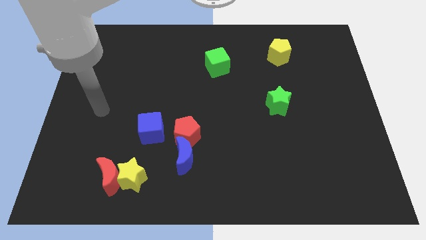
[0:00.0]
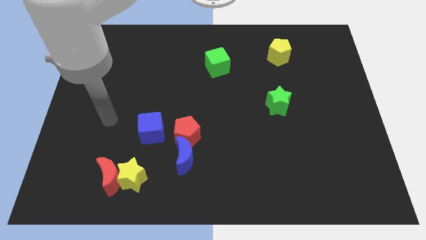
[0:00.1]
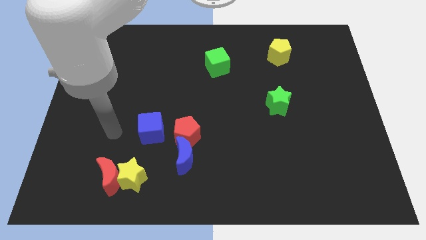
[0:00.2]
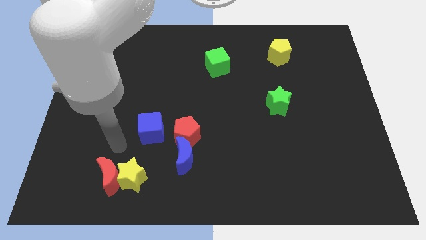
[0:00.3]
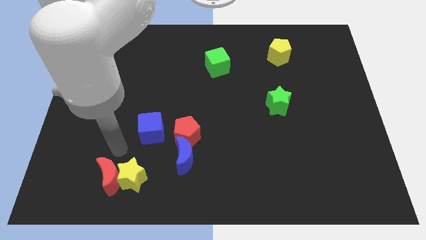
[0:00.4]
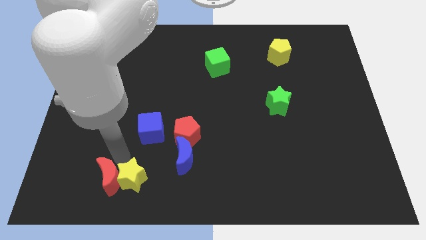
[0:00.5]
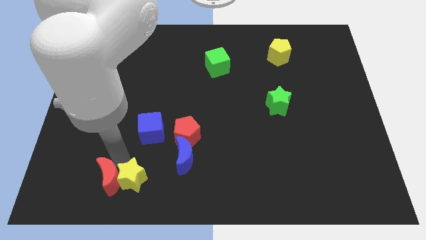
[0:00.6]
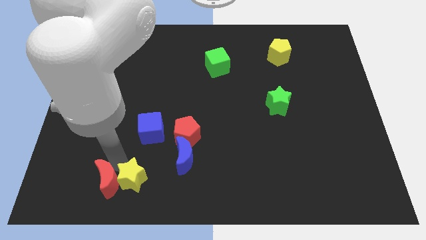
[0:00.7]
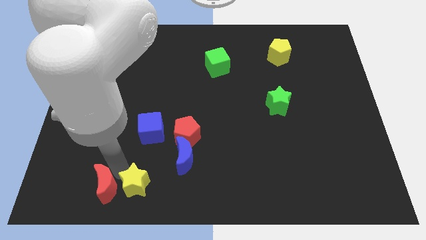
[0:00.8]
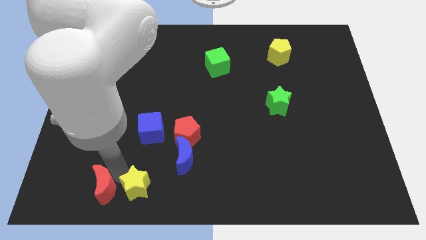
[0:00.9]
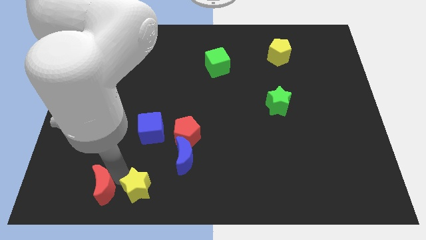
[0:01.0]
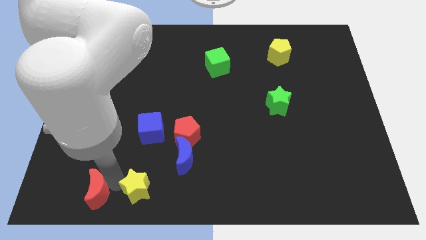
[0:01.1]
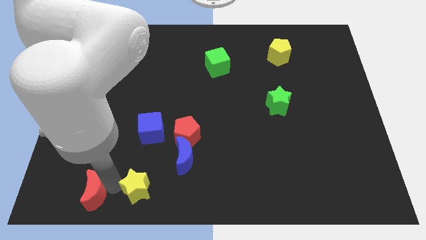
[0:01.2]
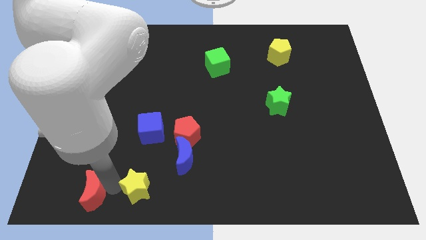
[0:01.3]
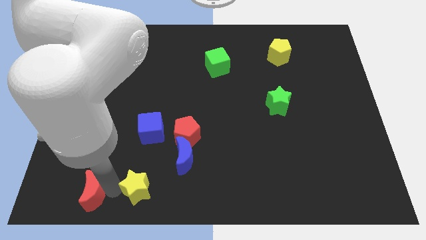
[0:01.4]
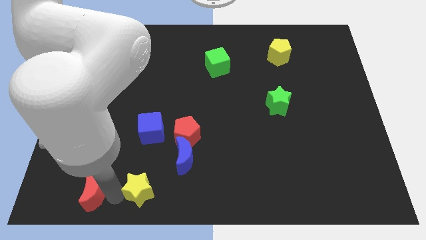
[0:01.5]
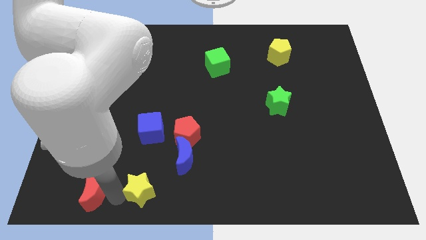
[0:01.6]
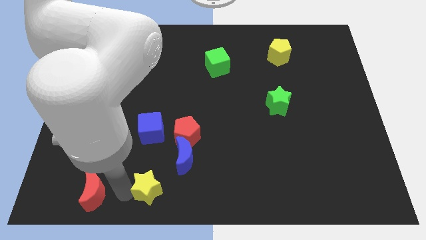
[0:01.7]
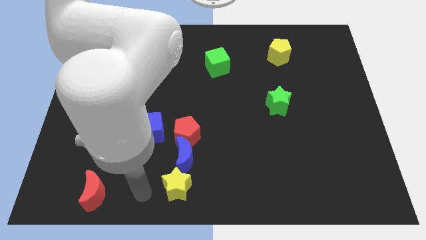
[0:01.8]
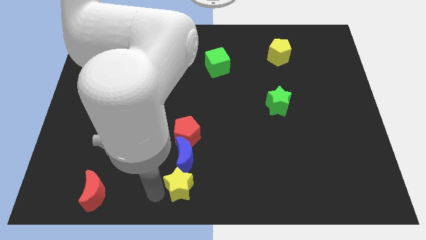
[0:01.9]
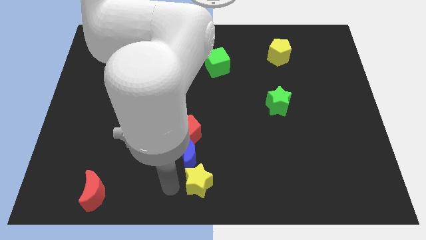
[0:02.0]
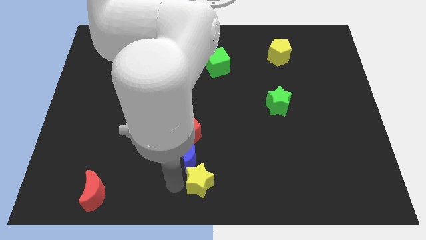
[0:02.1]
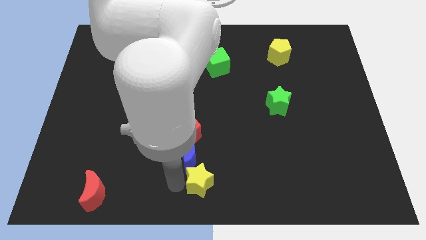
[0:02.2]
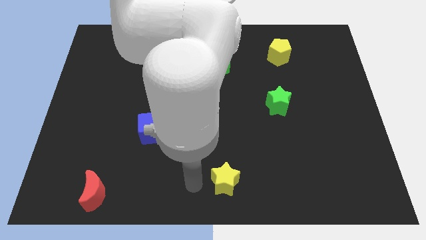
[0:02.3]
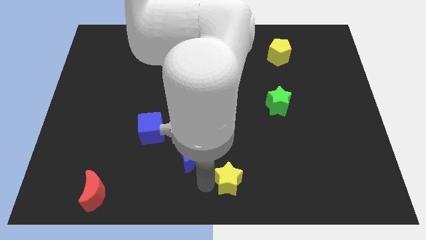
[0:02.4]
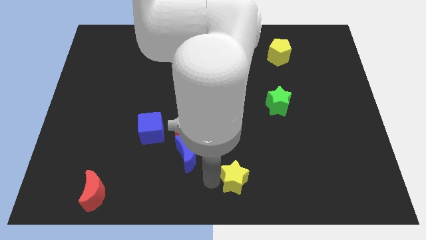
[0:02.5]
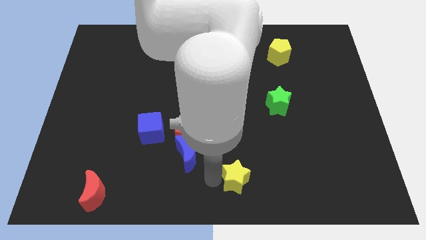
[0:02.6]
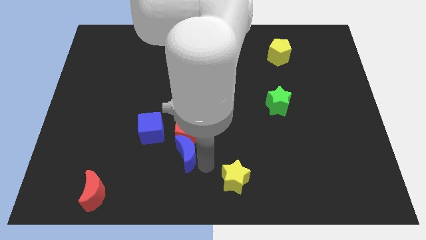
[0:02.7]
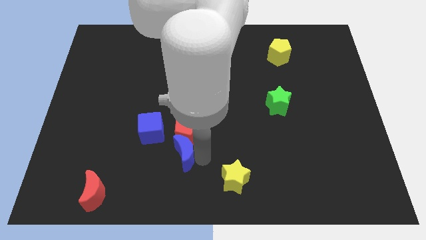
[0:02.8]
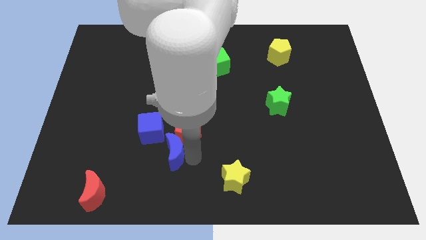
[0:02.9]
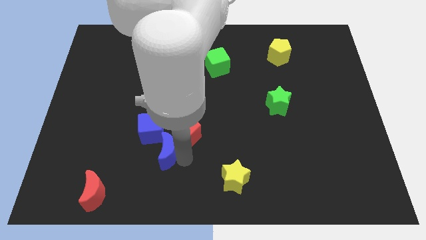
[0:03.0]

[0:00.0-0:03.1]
push the yellow star away from the red crescent and move away

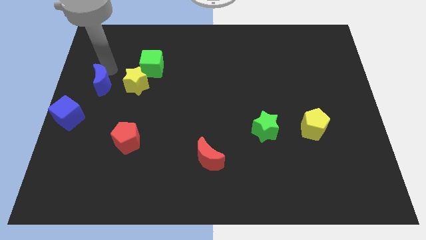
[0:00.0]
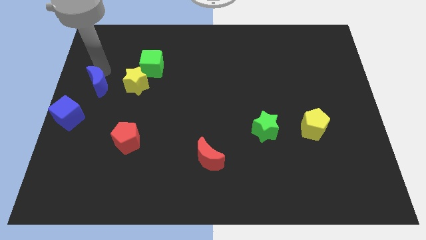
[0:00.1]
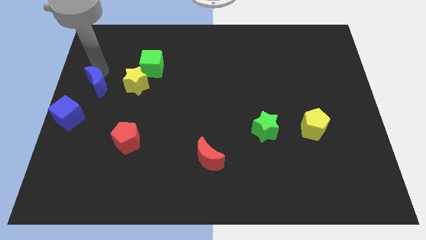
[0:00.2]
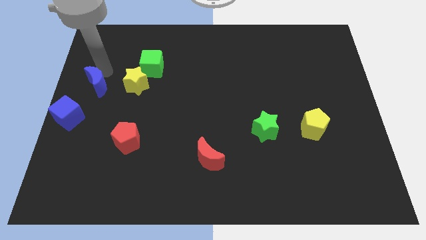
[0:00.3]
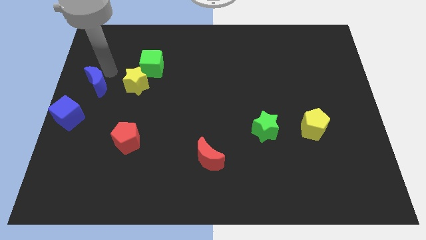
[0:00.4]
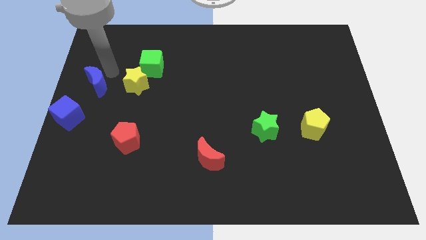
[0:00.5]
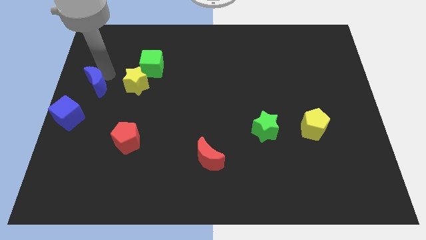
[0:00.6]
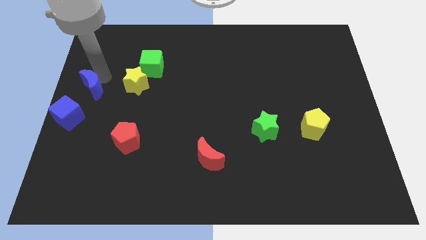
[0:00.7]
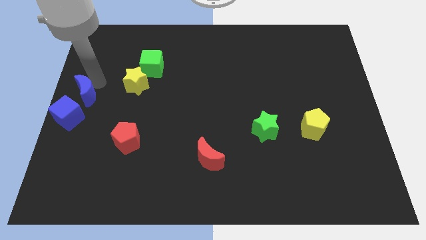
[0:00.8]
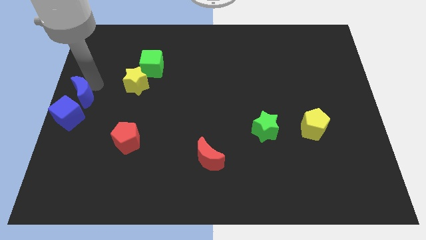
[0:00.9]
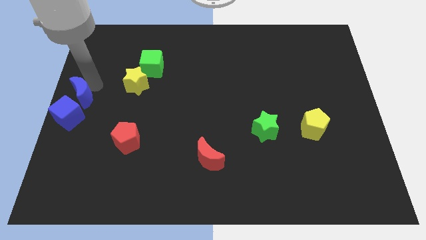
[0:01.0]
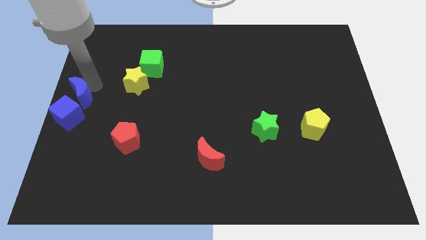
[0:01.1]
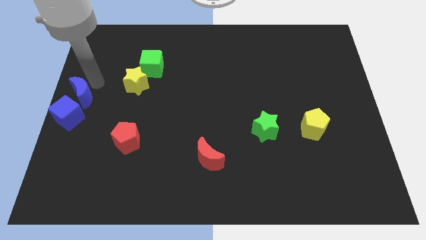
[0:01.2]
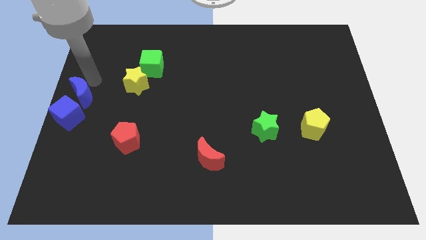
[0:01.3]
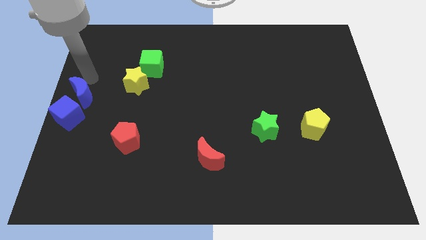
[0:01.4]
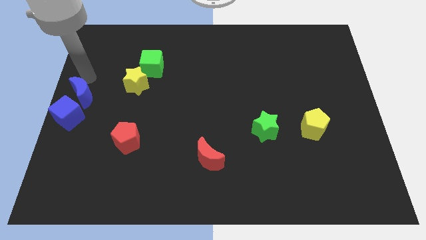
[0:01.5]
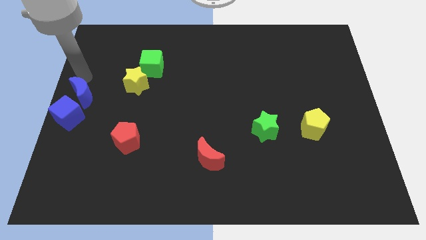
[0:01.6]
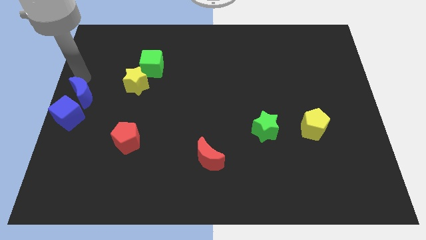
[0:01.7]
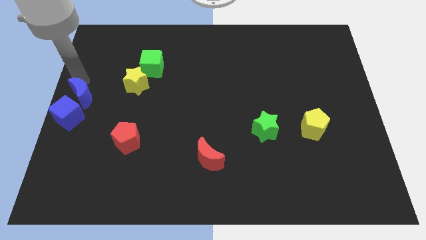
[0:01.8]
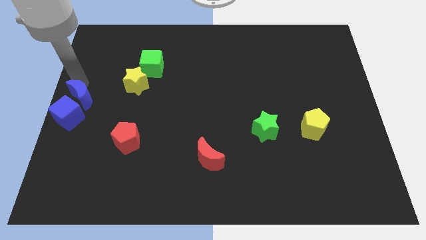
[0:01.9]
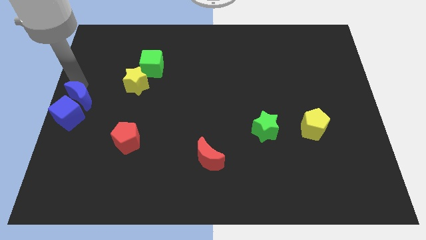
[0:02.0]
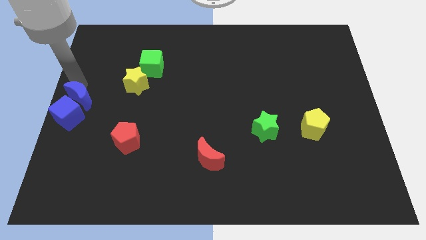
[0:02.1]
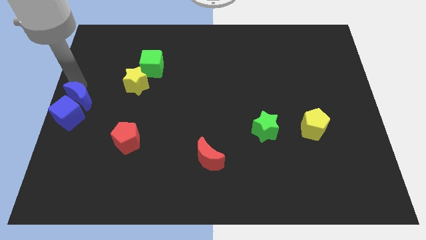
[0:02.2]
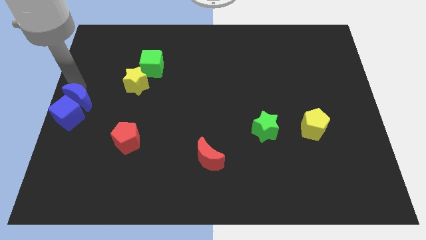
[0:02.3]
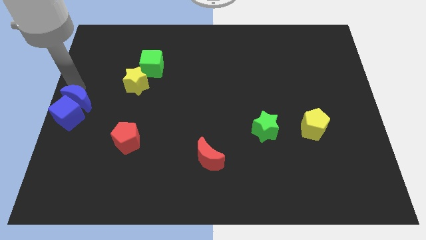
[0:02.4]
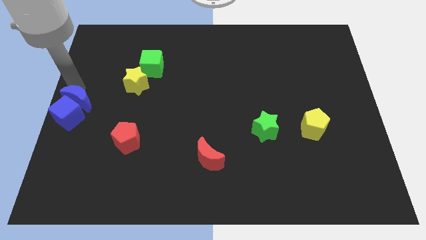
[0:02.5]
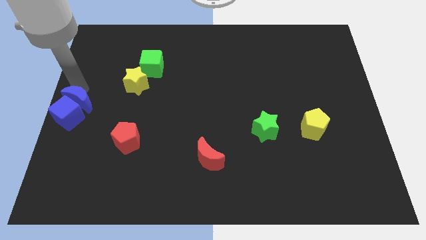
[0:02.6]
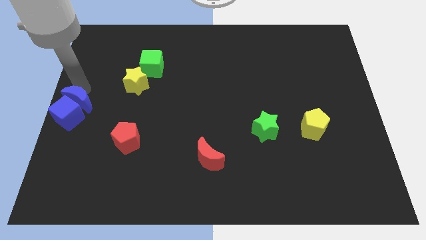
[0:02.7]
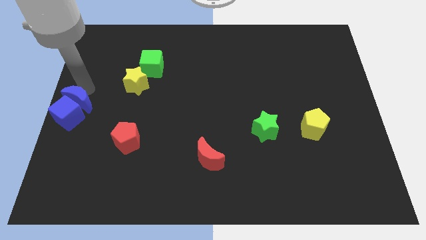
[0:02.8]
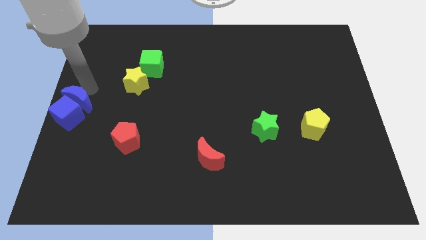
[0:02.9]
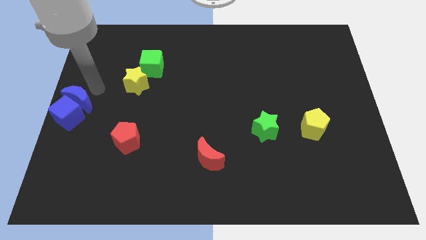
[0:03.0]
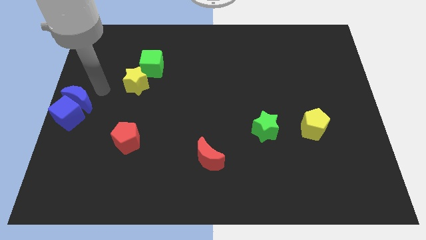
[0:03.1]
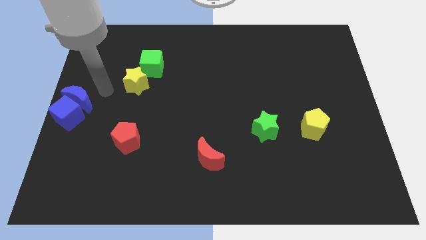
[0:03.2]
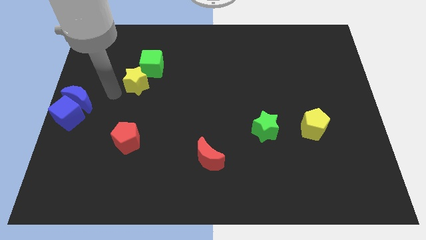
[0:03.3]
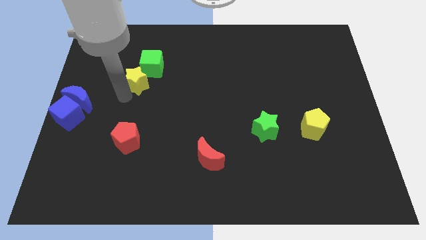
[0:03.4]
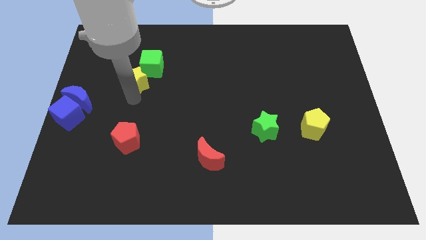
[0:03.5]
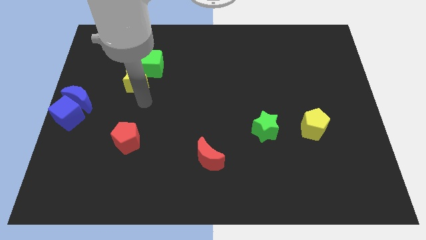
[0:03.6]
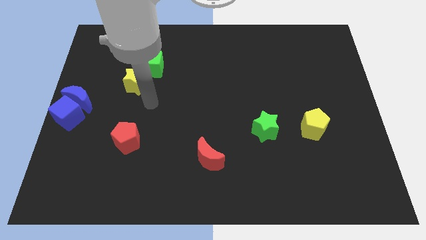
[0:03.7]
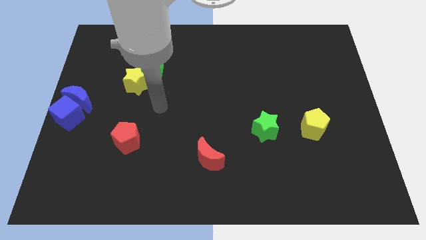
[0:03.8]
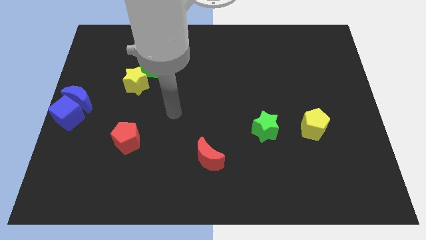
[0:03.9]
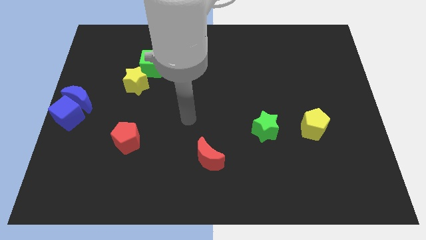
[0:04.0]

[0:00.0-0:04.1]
place the blue crescent at the top of the blue cube

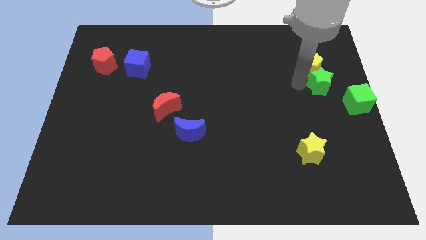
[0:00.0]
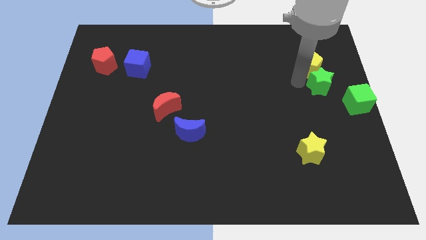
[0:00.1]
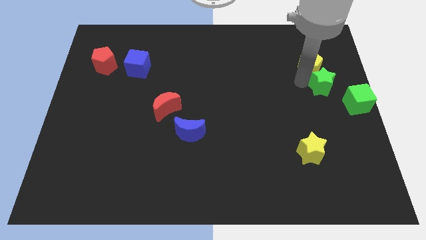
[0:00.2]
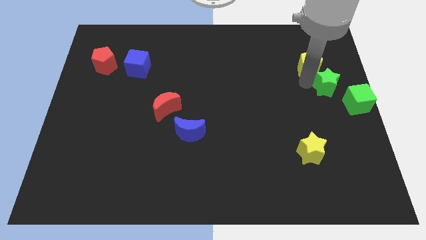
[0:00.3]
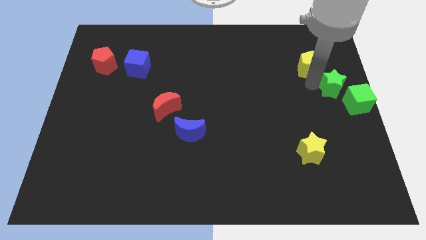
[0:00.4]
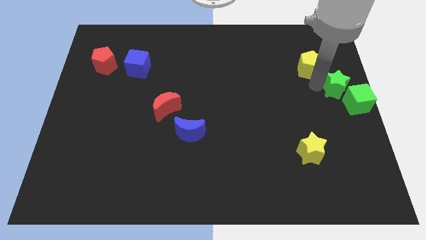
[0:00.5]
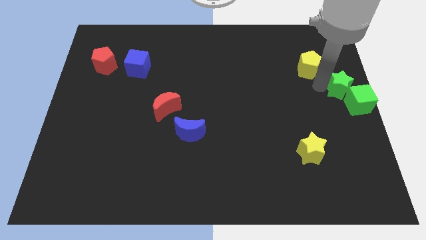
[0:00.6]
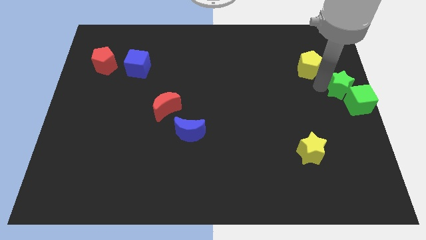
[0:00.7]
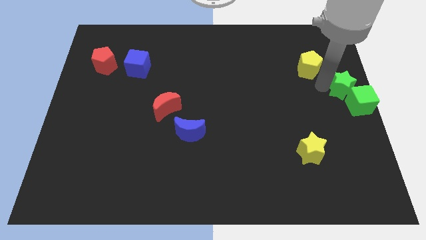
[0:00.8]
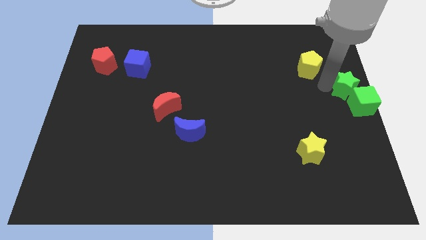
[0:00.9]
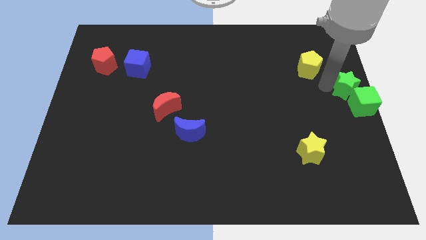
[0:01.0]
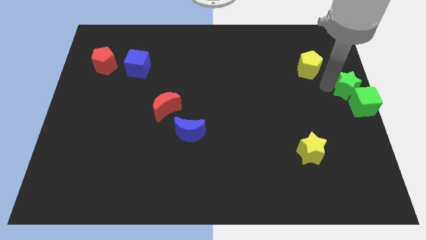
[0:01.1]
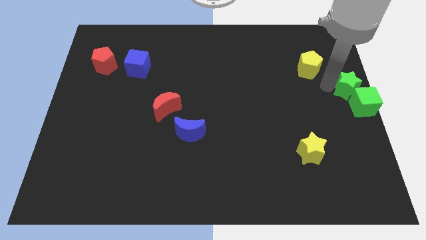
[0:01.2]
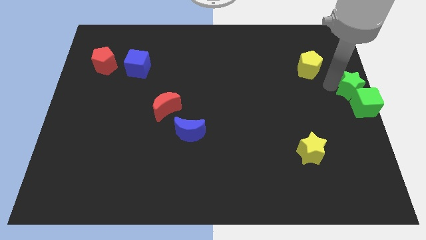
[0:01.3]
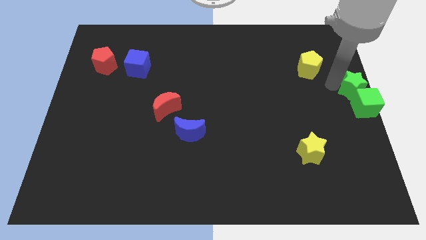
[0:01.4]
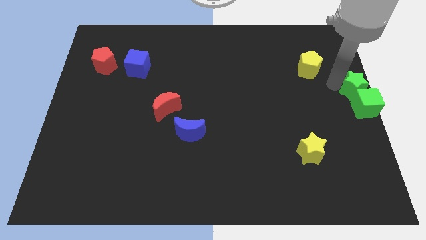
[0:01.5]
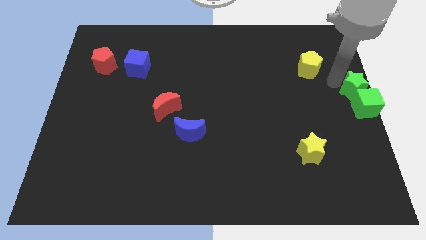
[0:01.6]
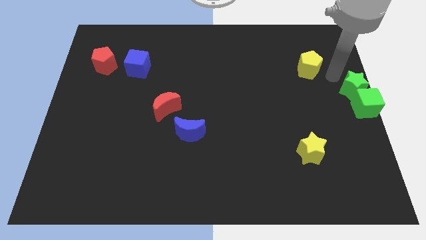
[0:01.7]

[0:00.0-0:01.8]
push the green star above the green cube

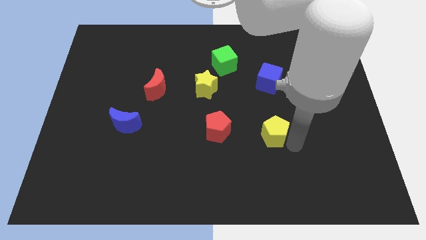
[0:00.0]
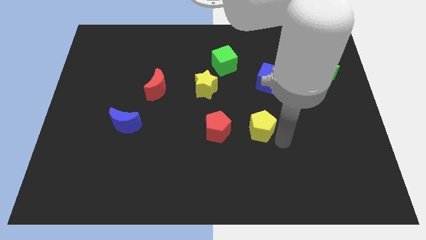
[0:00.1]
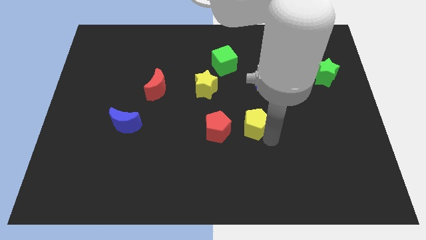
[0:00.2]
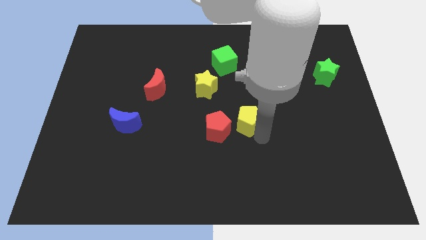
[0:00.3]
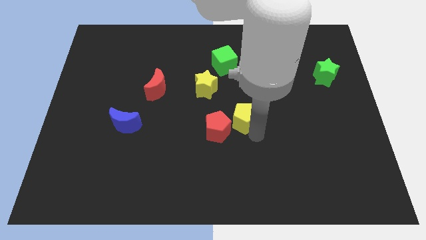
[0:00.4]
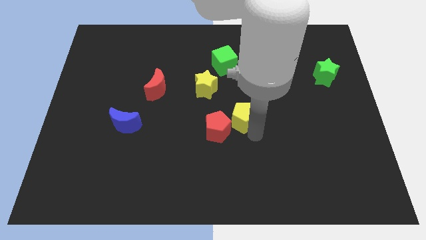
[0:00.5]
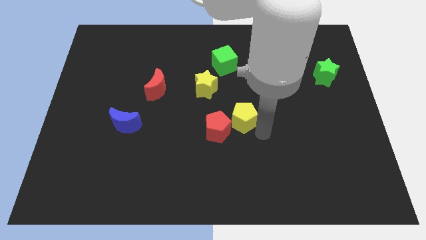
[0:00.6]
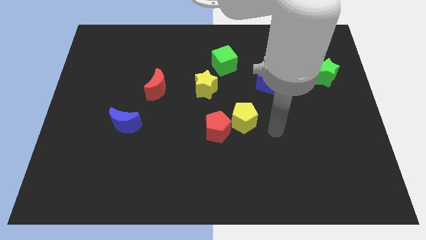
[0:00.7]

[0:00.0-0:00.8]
push the yellow pentagon close to the red pentagon
